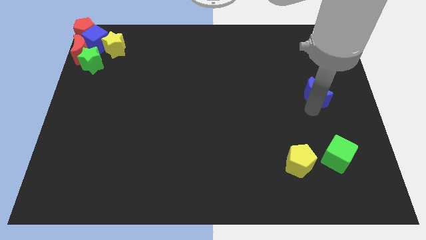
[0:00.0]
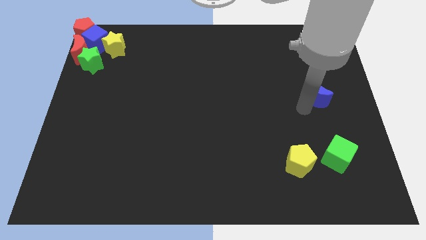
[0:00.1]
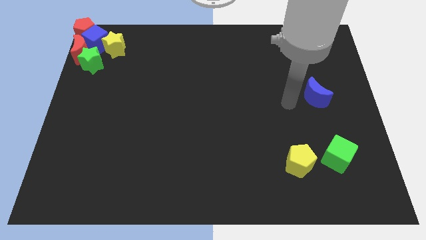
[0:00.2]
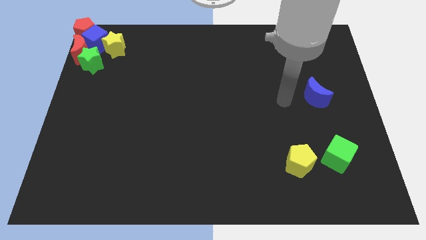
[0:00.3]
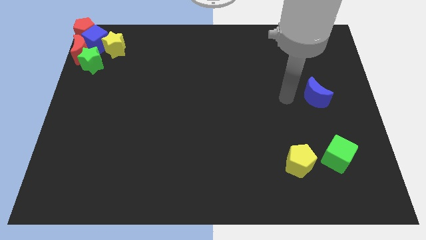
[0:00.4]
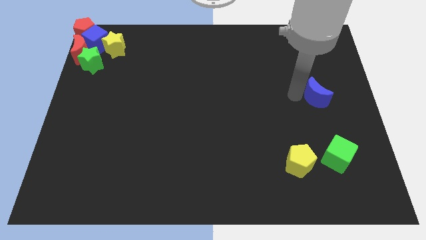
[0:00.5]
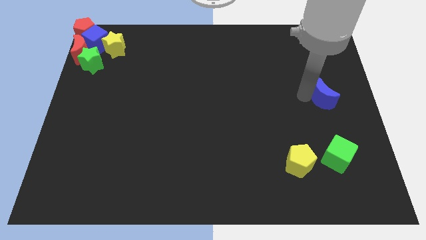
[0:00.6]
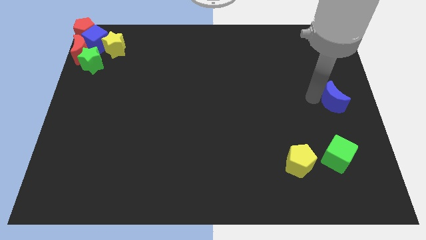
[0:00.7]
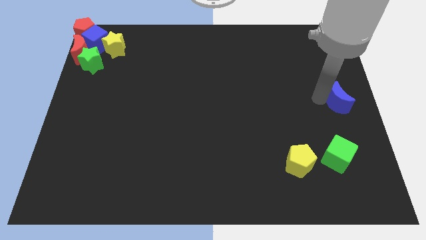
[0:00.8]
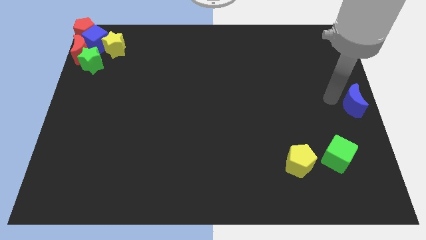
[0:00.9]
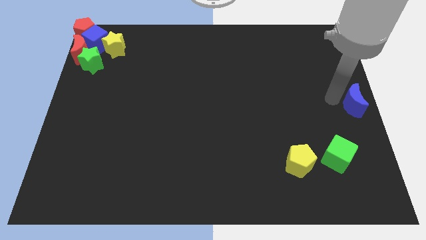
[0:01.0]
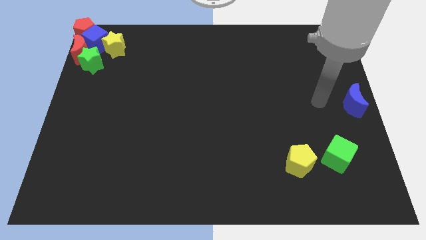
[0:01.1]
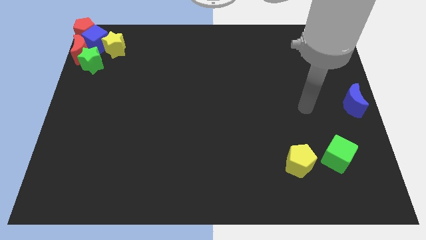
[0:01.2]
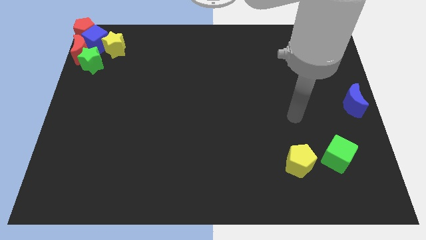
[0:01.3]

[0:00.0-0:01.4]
move blue crescent to the right center

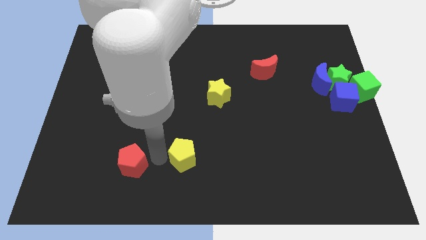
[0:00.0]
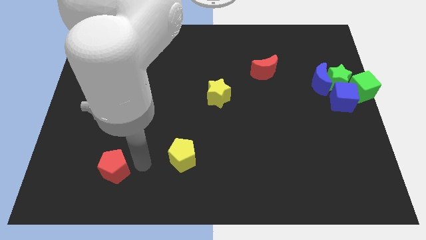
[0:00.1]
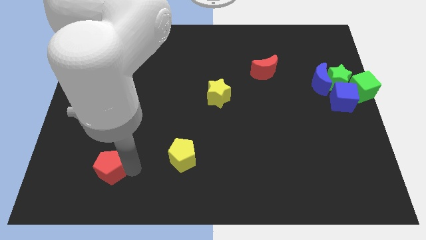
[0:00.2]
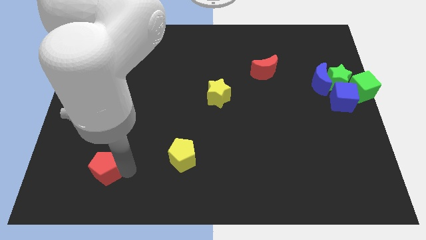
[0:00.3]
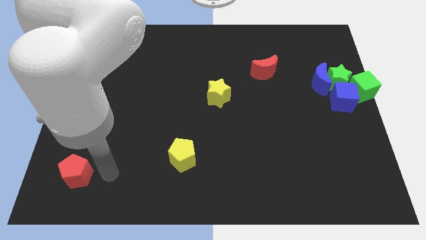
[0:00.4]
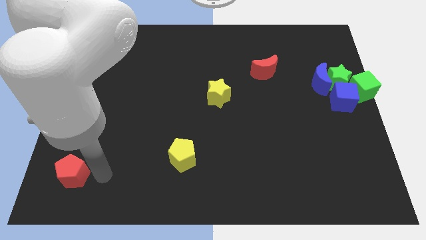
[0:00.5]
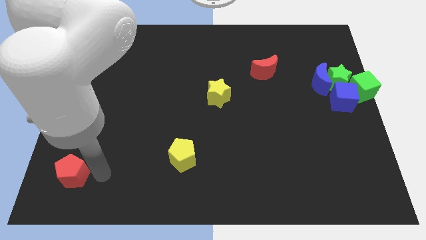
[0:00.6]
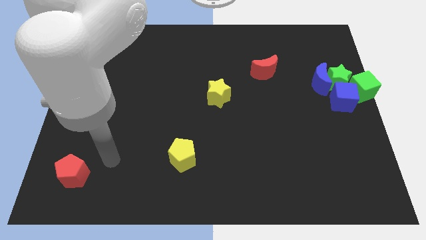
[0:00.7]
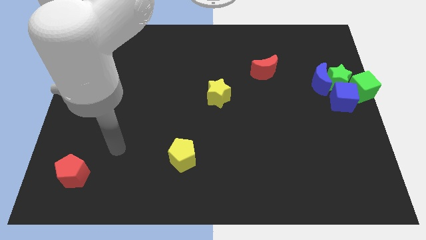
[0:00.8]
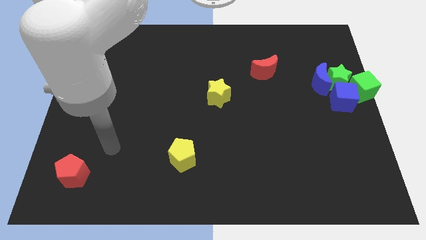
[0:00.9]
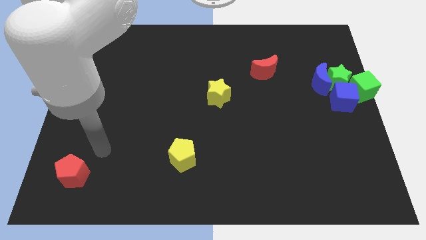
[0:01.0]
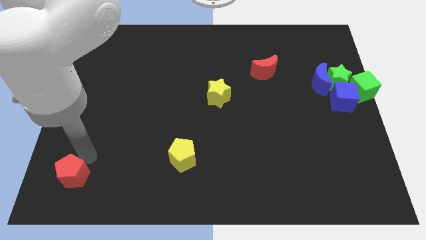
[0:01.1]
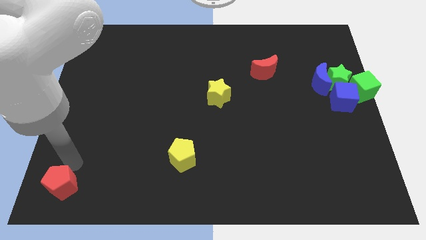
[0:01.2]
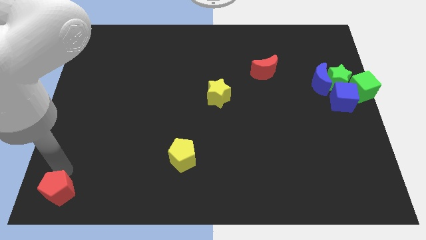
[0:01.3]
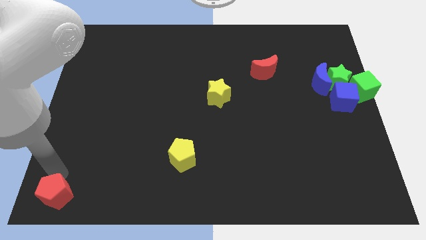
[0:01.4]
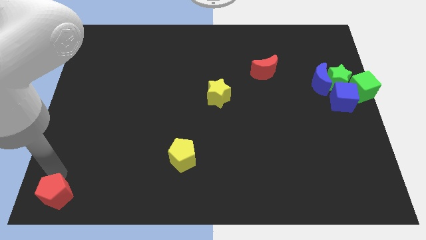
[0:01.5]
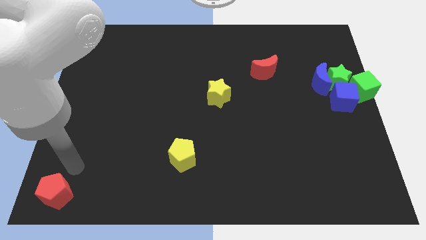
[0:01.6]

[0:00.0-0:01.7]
push the red pentagon towards the bottom left of the board

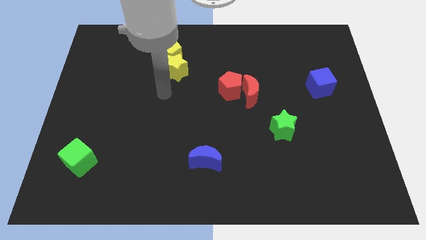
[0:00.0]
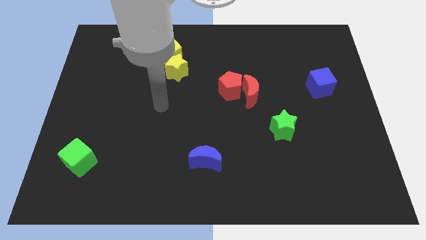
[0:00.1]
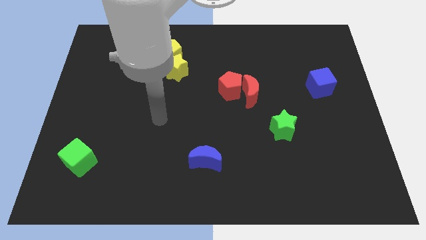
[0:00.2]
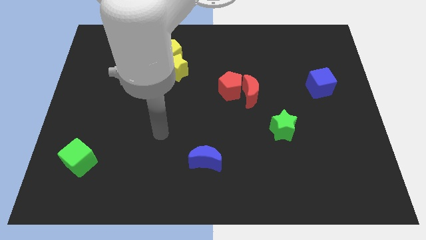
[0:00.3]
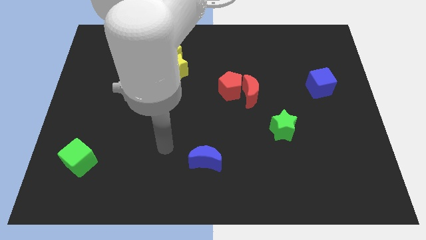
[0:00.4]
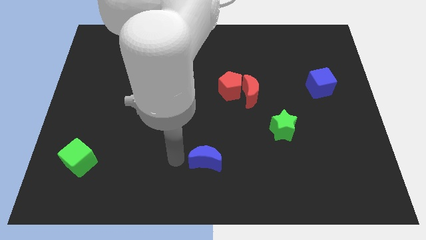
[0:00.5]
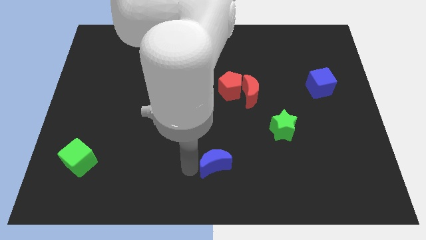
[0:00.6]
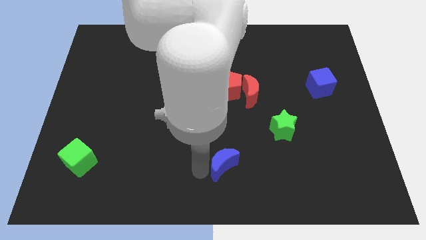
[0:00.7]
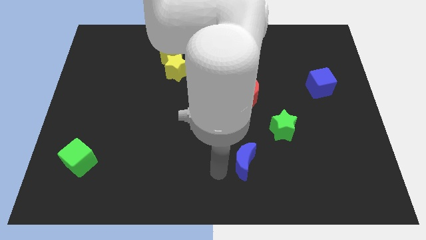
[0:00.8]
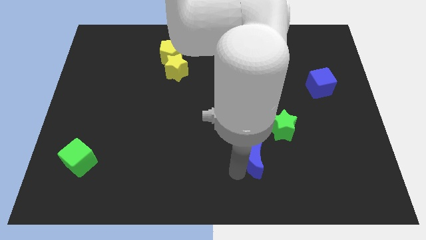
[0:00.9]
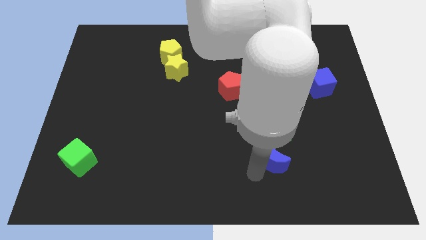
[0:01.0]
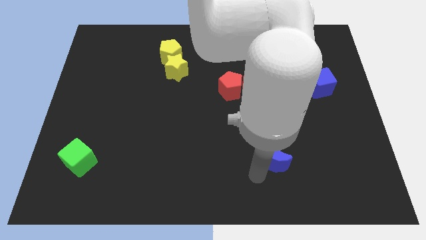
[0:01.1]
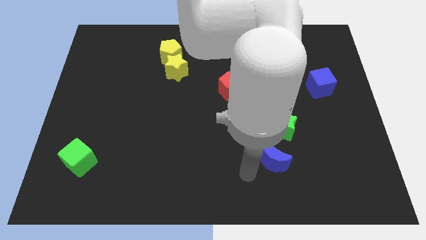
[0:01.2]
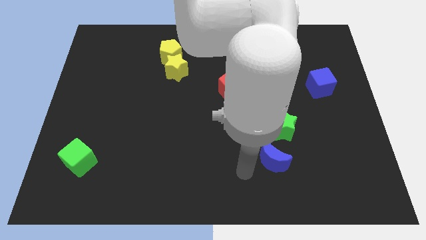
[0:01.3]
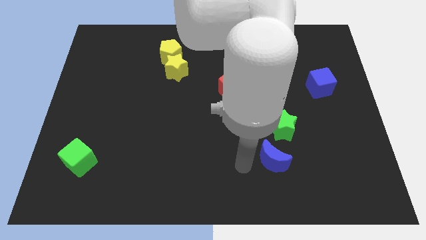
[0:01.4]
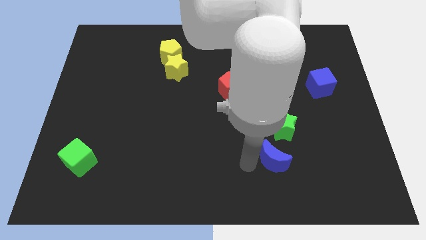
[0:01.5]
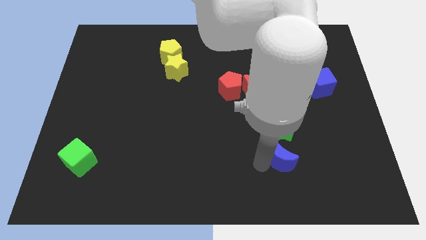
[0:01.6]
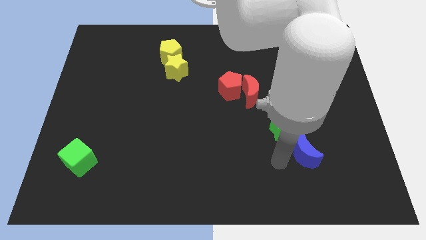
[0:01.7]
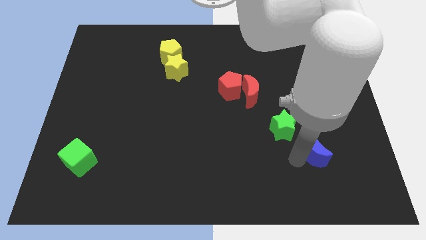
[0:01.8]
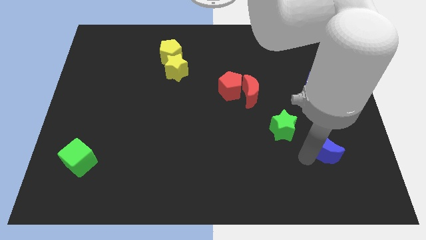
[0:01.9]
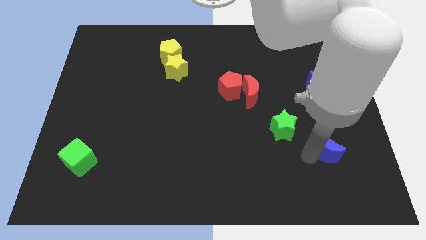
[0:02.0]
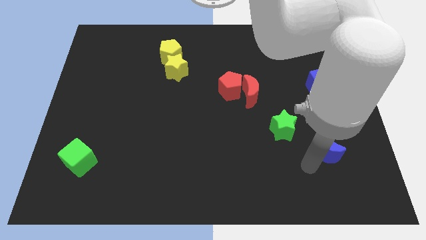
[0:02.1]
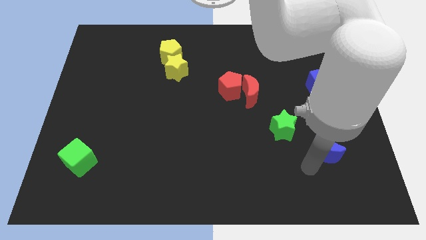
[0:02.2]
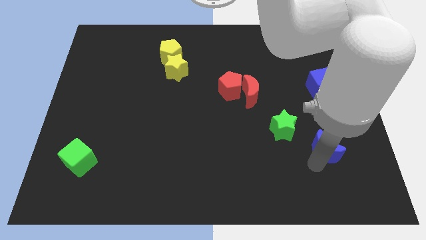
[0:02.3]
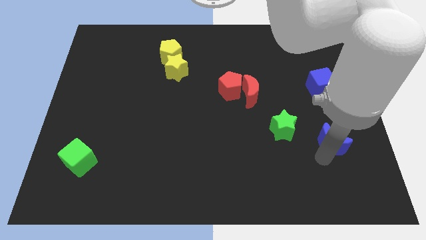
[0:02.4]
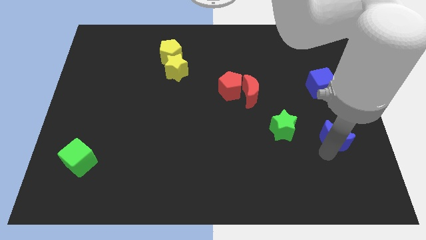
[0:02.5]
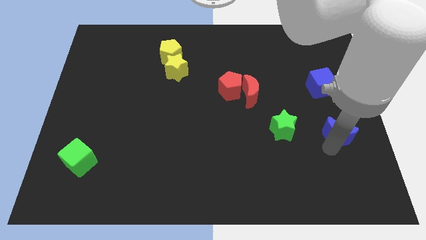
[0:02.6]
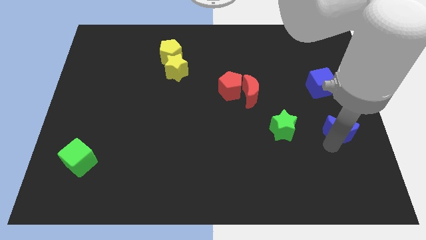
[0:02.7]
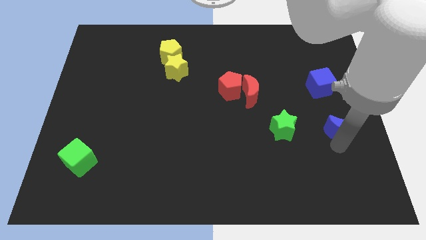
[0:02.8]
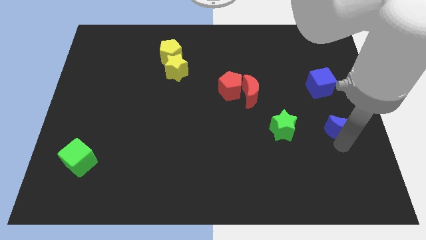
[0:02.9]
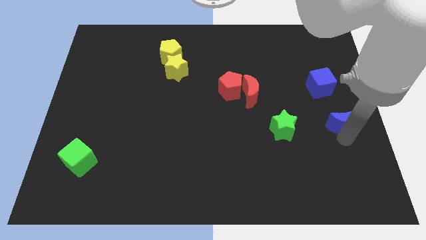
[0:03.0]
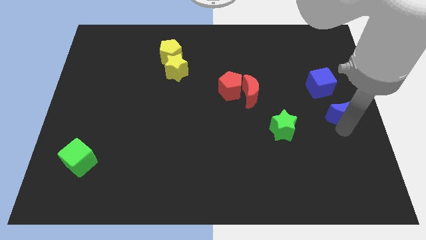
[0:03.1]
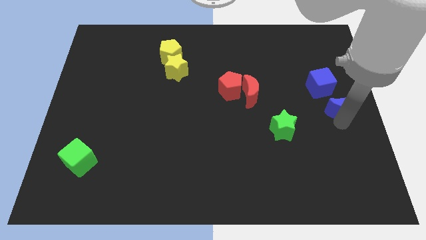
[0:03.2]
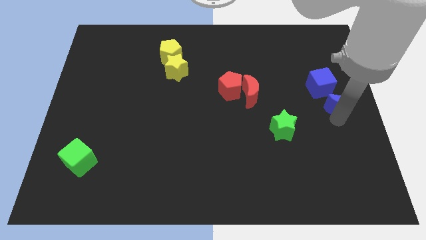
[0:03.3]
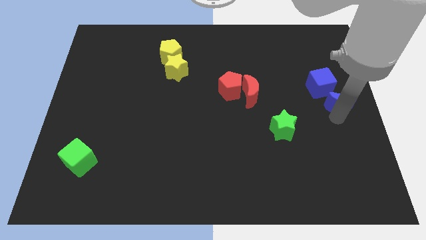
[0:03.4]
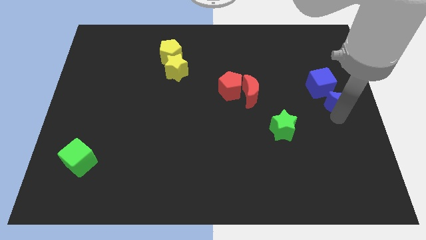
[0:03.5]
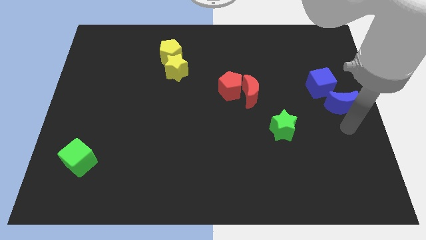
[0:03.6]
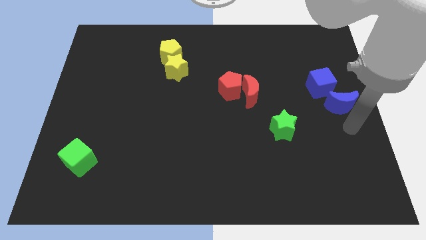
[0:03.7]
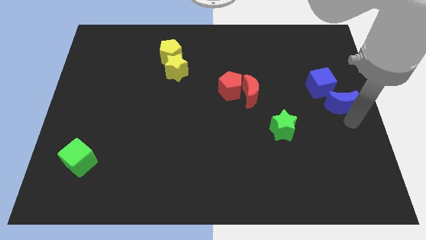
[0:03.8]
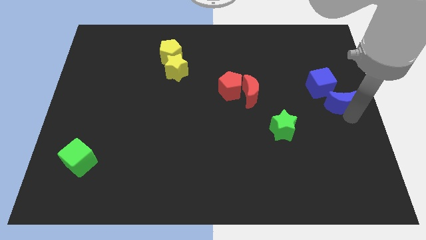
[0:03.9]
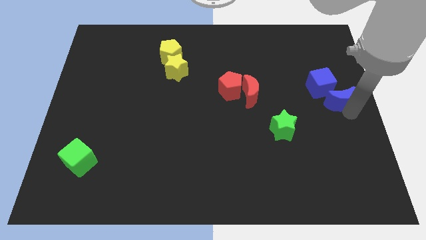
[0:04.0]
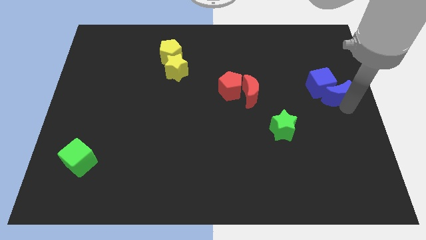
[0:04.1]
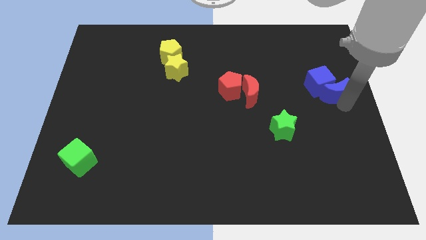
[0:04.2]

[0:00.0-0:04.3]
move the blue crescent below the blue cube

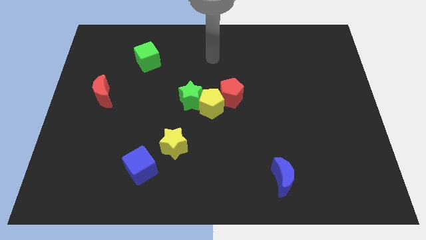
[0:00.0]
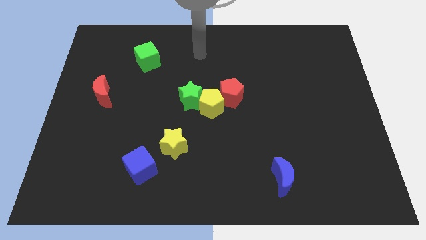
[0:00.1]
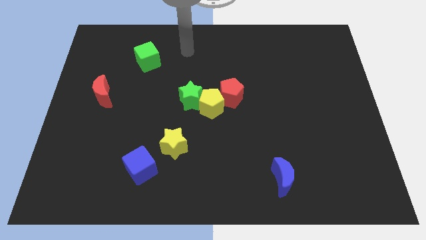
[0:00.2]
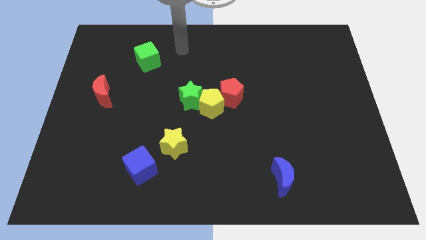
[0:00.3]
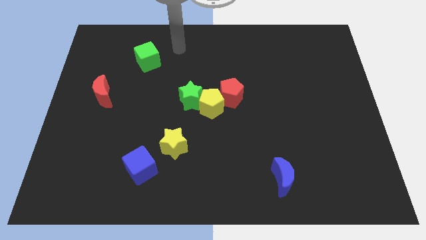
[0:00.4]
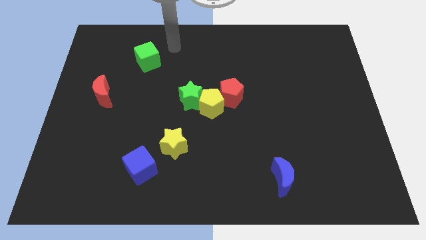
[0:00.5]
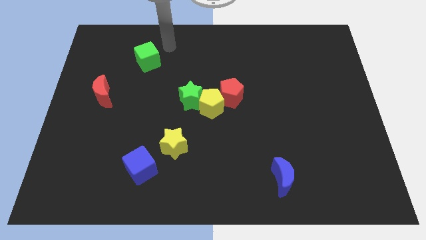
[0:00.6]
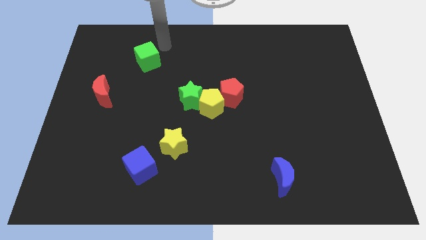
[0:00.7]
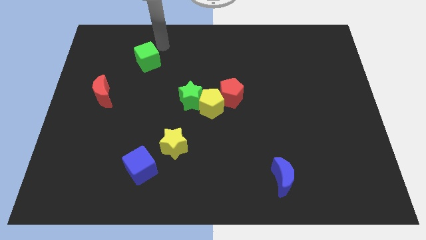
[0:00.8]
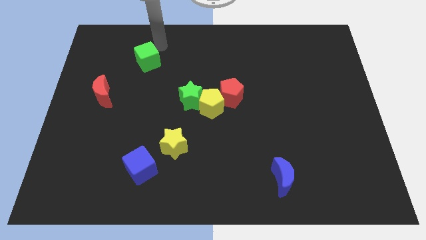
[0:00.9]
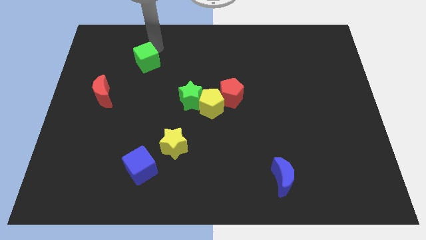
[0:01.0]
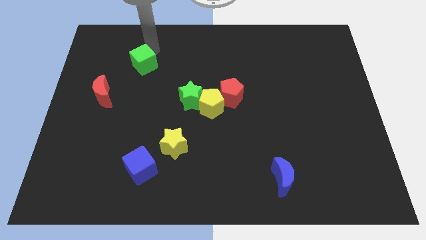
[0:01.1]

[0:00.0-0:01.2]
move your arm to the top of the green cube

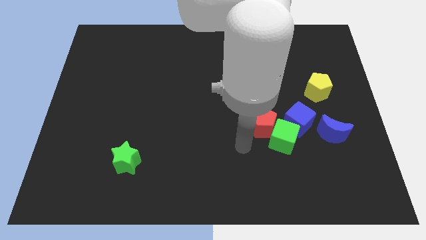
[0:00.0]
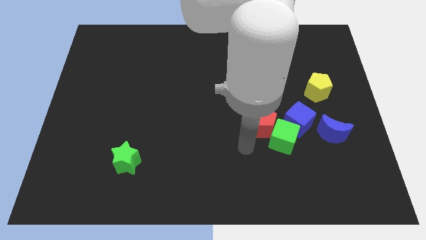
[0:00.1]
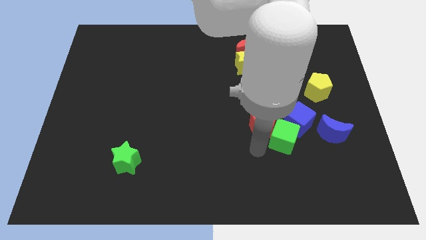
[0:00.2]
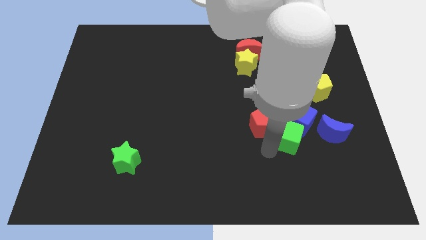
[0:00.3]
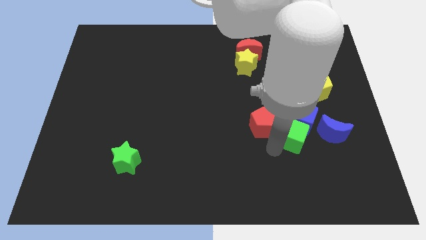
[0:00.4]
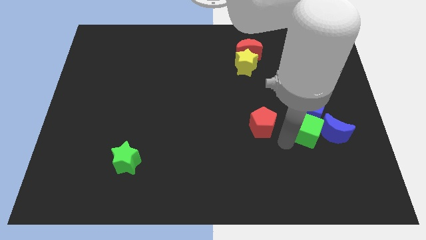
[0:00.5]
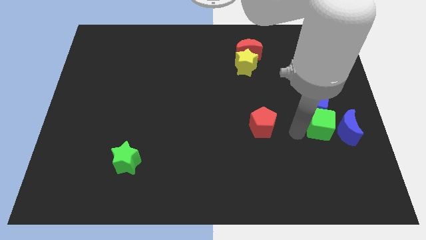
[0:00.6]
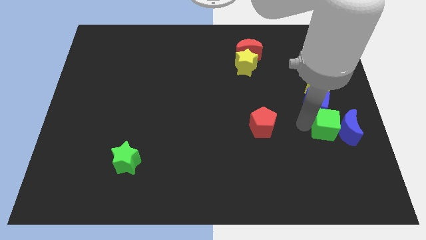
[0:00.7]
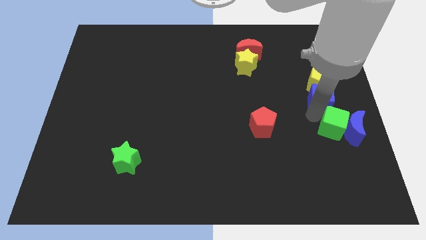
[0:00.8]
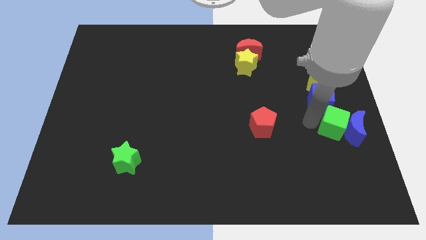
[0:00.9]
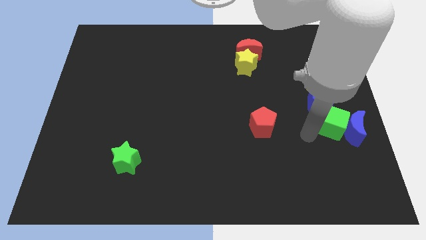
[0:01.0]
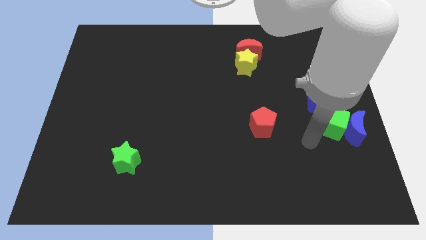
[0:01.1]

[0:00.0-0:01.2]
place the green cube left to the blue moon
